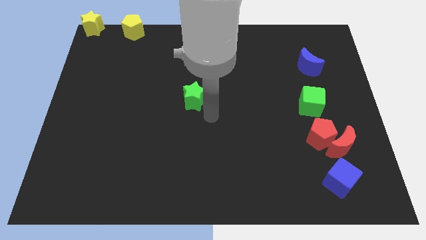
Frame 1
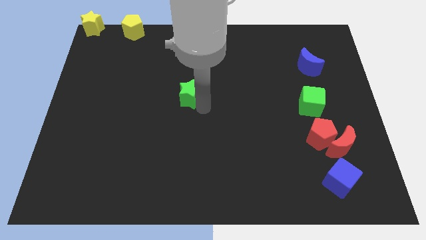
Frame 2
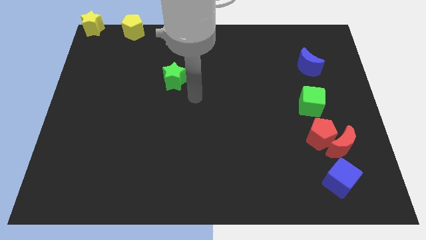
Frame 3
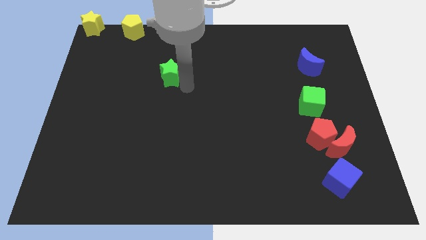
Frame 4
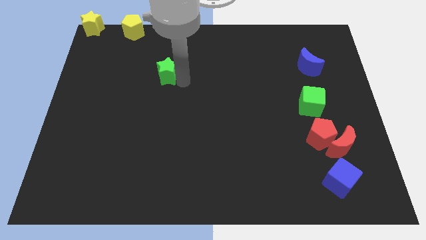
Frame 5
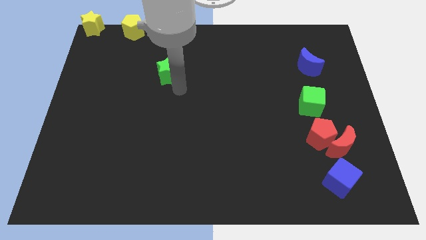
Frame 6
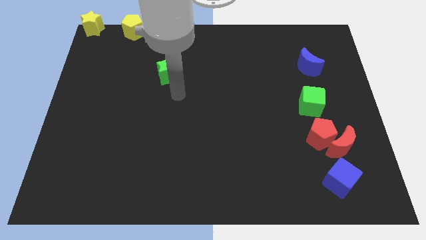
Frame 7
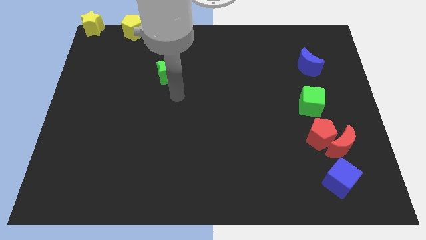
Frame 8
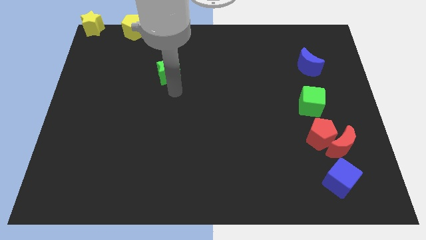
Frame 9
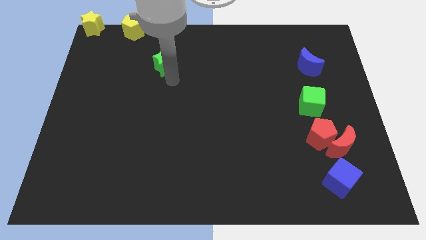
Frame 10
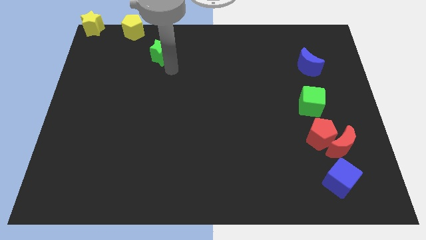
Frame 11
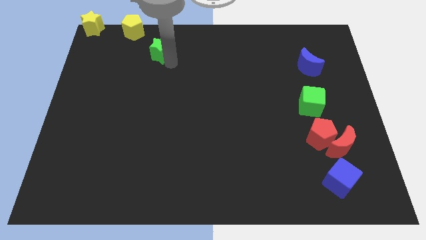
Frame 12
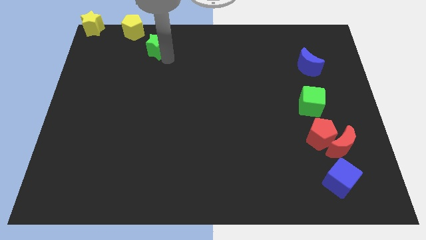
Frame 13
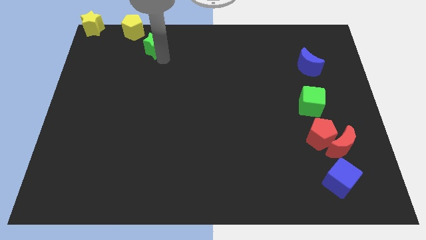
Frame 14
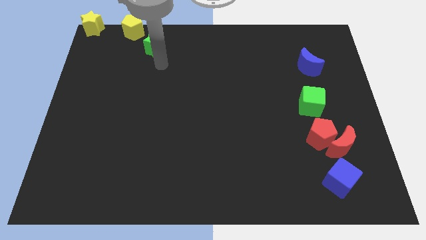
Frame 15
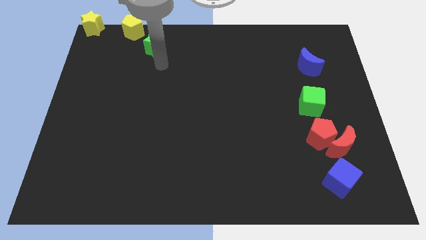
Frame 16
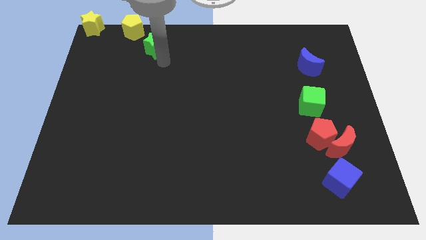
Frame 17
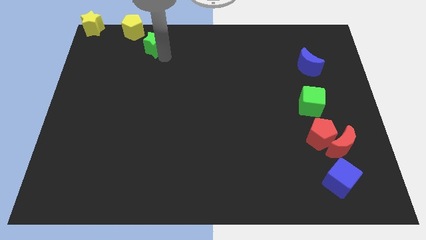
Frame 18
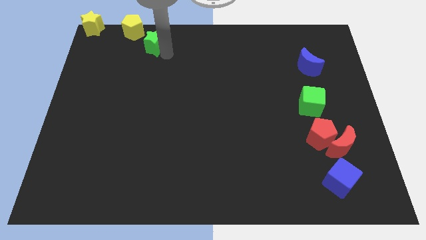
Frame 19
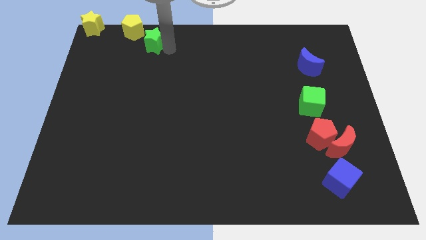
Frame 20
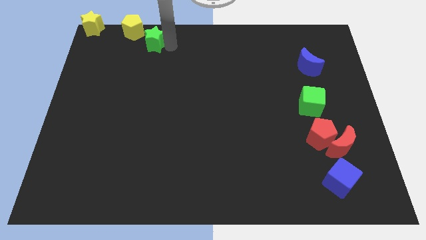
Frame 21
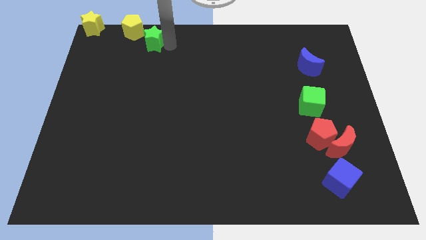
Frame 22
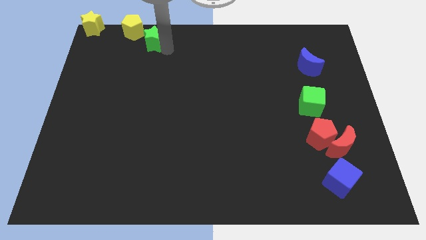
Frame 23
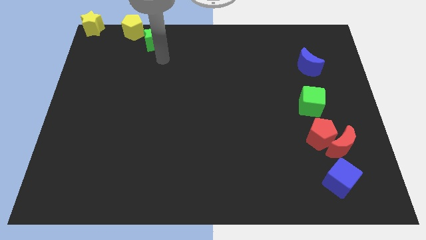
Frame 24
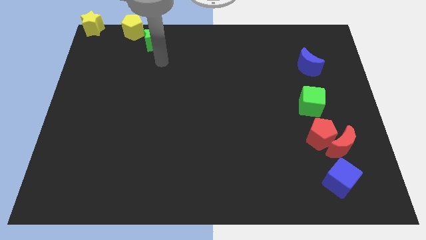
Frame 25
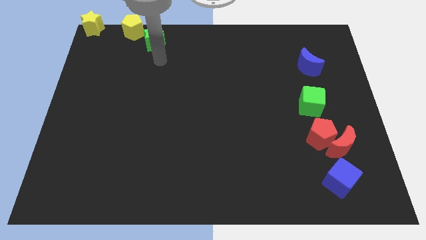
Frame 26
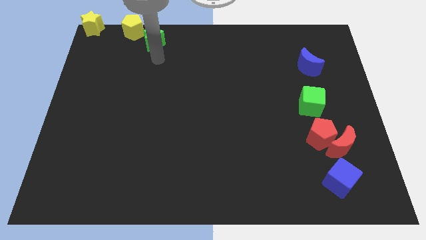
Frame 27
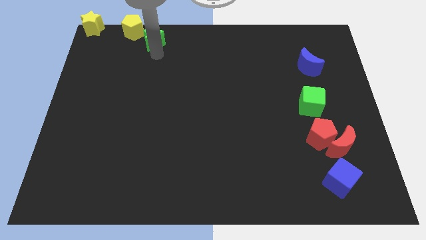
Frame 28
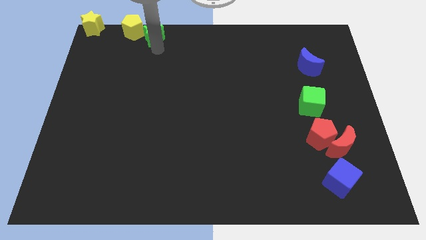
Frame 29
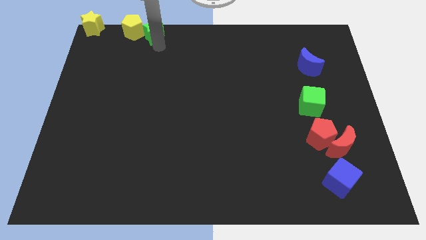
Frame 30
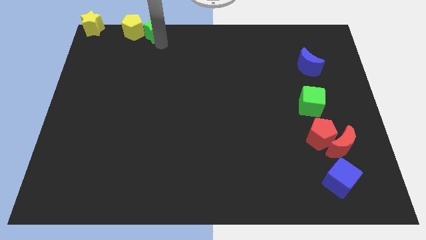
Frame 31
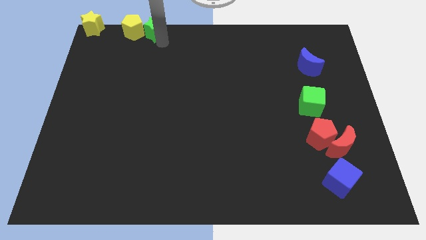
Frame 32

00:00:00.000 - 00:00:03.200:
drag the green star right to the yellow pentagon

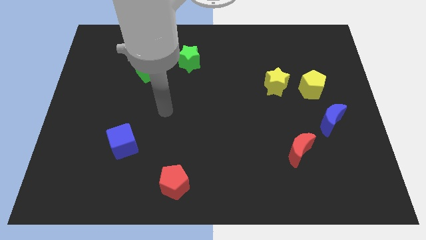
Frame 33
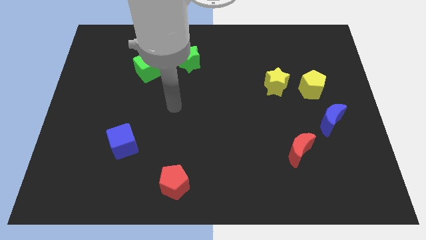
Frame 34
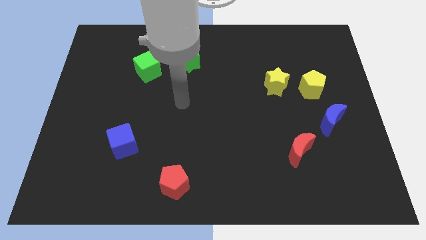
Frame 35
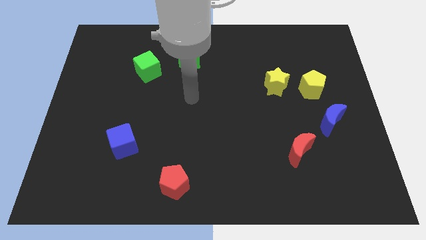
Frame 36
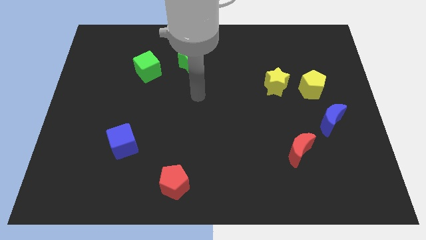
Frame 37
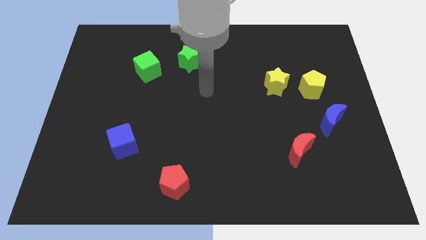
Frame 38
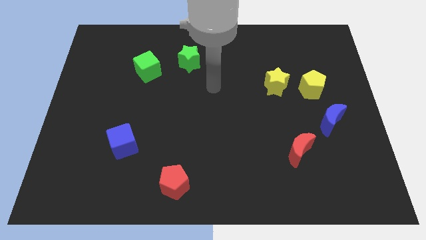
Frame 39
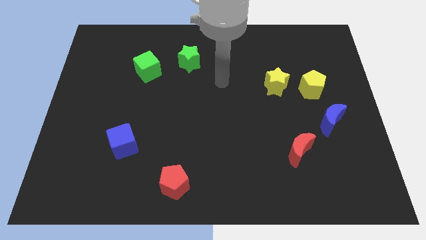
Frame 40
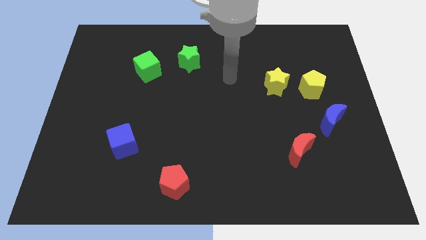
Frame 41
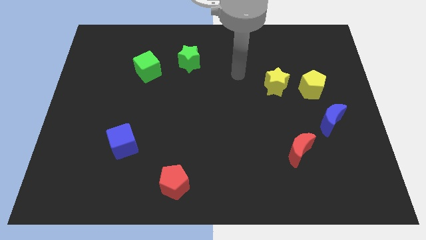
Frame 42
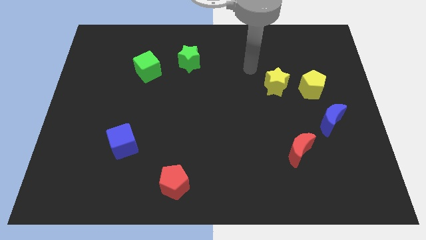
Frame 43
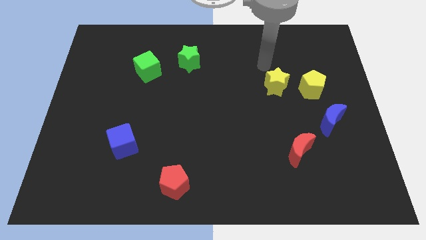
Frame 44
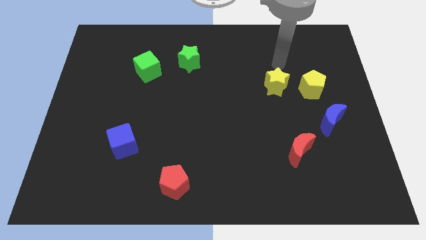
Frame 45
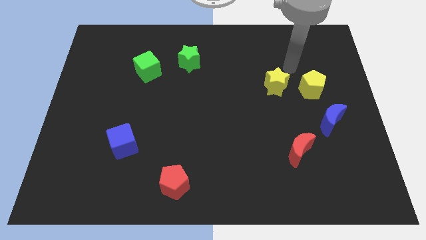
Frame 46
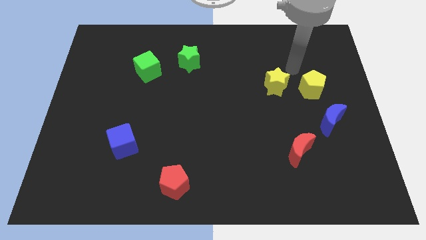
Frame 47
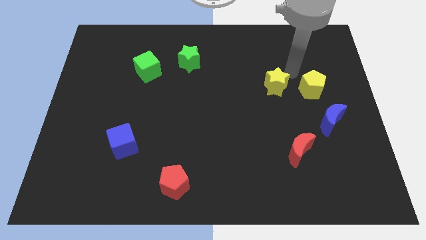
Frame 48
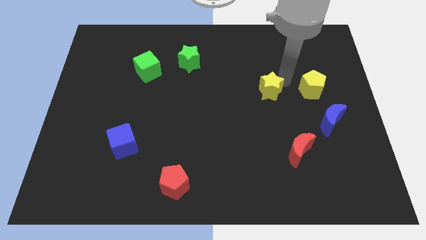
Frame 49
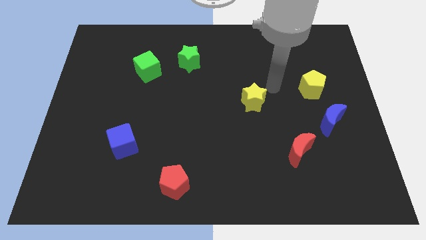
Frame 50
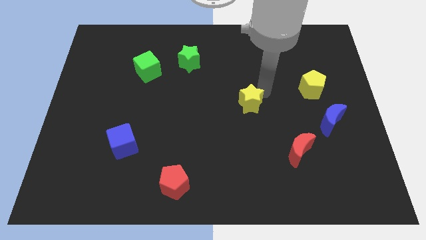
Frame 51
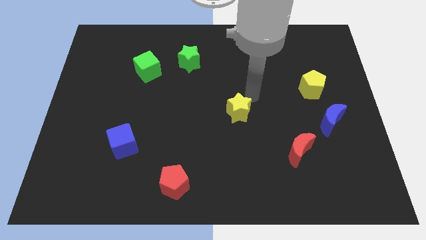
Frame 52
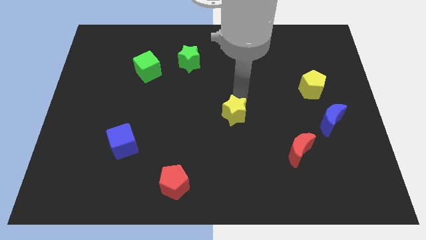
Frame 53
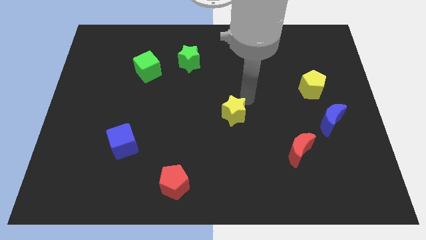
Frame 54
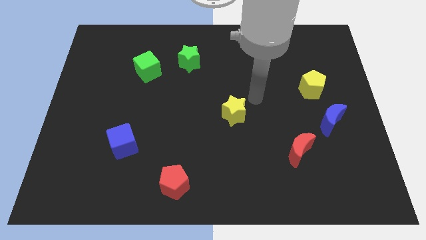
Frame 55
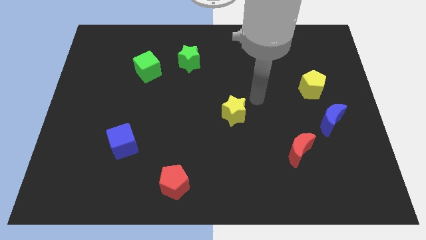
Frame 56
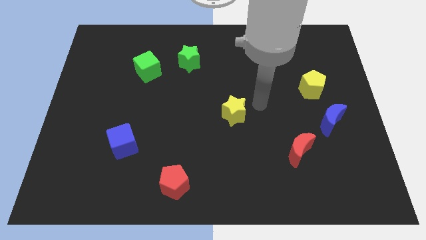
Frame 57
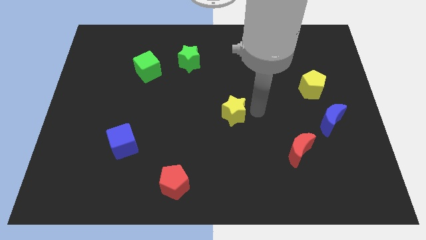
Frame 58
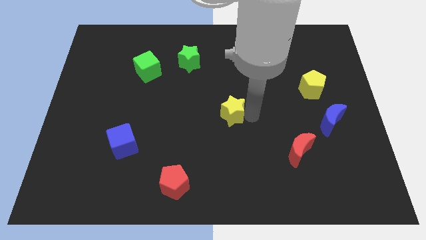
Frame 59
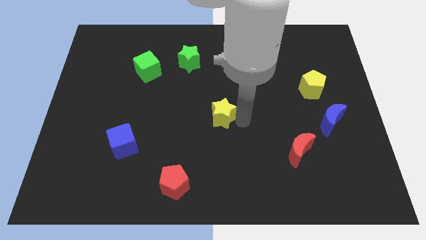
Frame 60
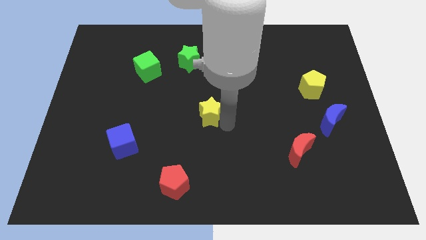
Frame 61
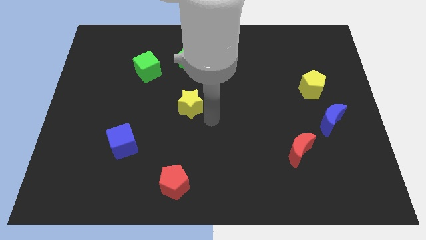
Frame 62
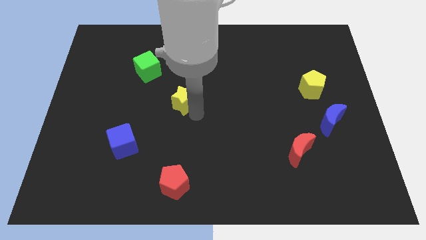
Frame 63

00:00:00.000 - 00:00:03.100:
push the yellow star to the bottom side of the green star

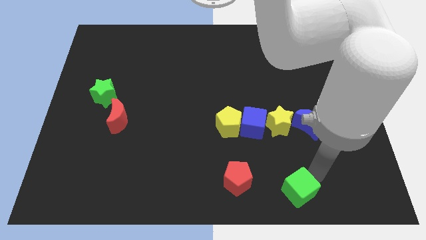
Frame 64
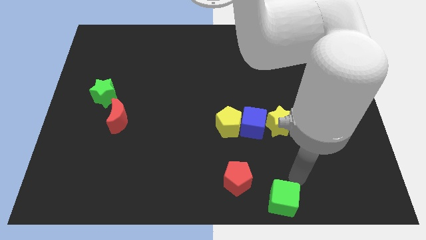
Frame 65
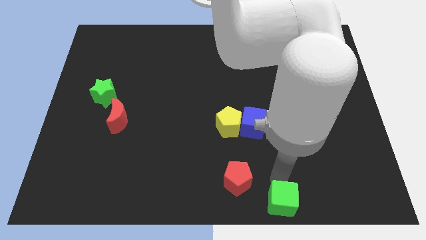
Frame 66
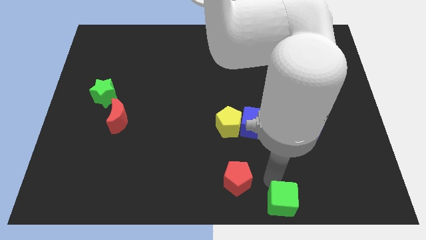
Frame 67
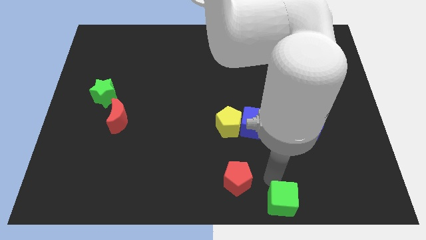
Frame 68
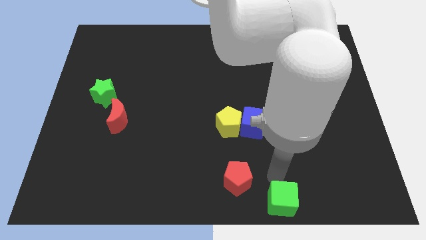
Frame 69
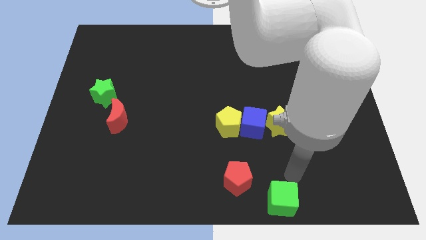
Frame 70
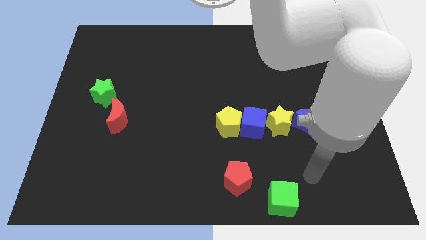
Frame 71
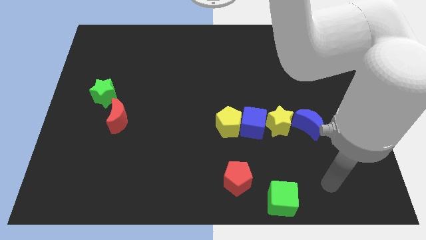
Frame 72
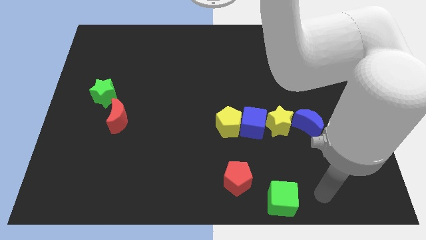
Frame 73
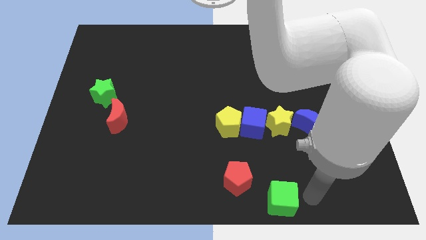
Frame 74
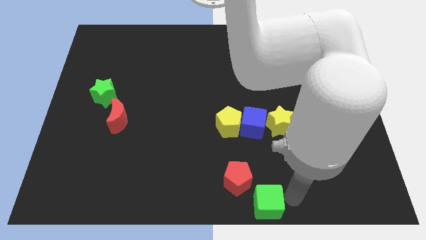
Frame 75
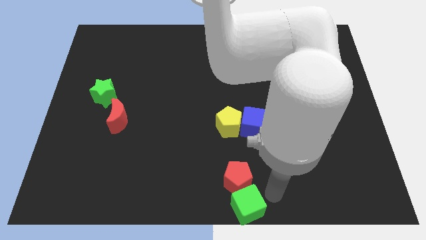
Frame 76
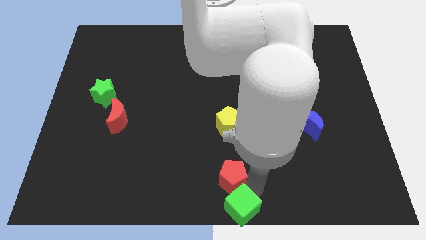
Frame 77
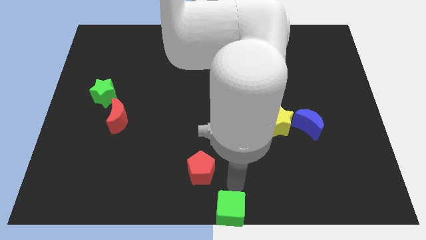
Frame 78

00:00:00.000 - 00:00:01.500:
place the green cube at the bottom center of the board

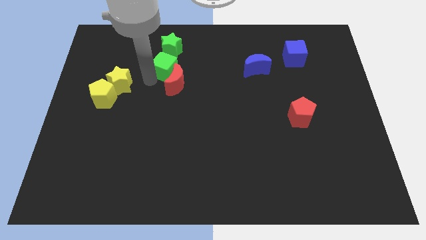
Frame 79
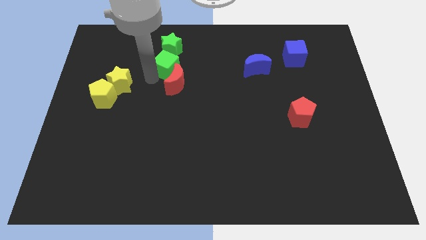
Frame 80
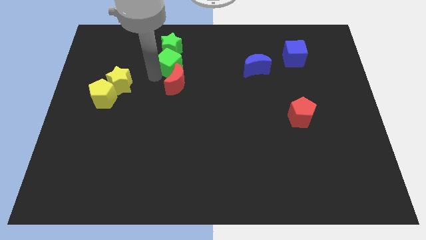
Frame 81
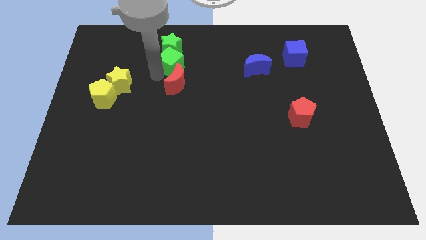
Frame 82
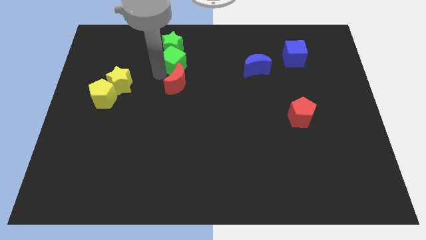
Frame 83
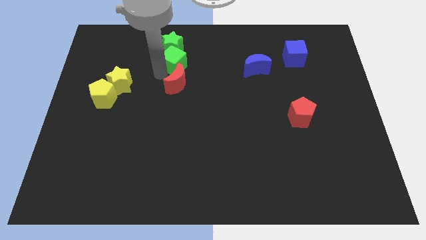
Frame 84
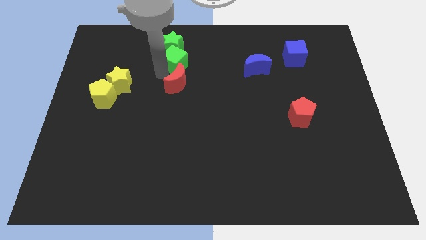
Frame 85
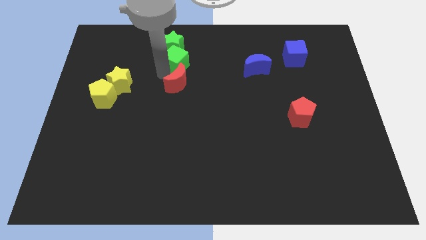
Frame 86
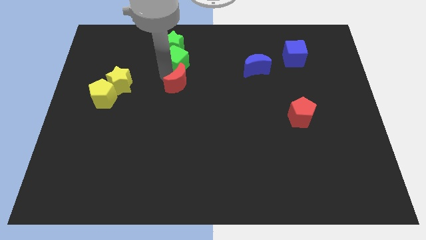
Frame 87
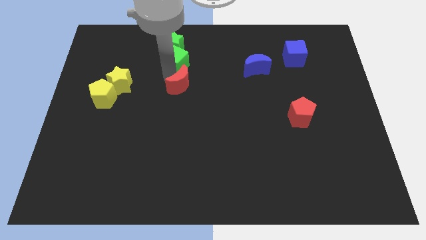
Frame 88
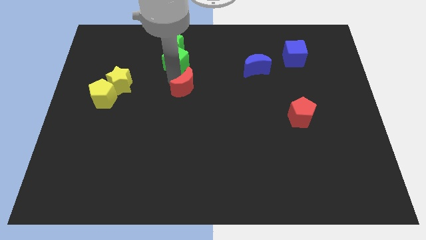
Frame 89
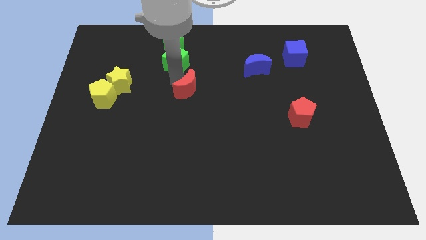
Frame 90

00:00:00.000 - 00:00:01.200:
attach the green cube and the green star
